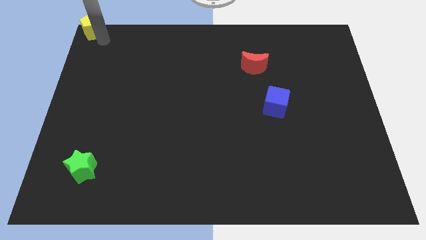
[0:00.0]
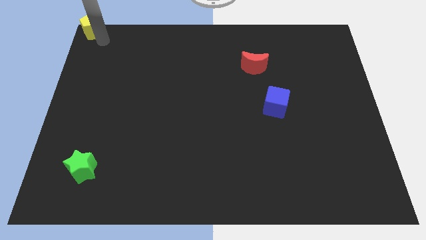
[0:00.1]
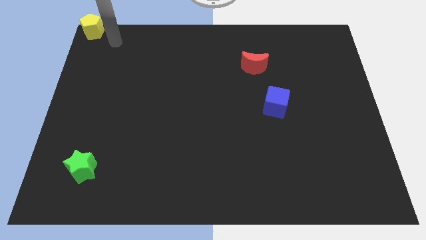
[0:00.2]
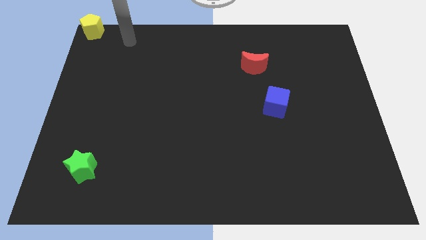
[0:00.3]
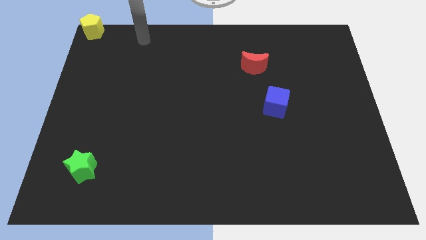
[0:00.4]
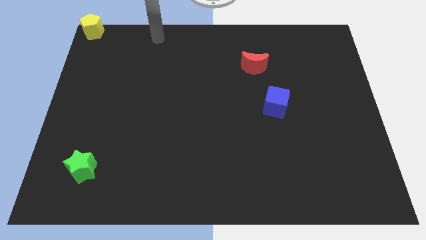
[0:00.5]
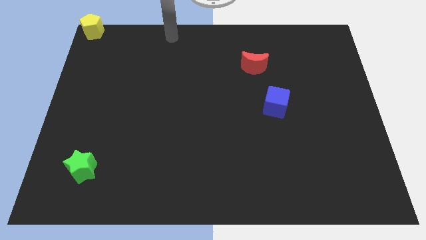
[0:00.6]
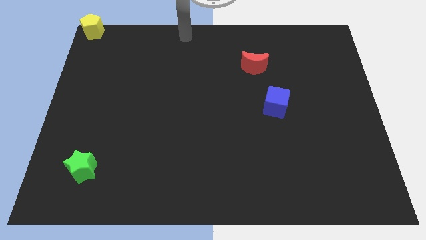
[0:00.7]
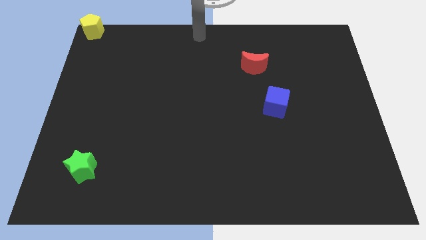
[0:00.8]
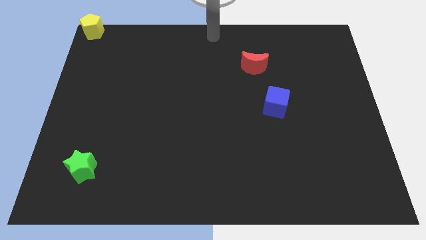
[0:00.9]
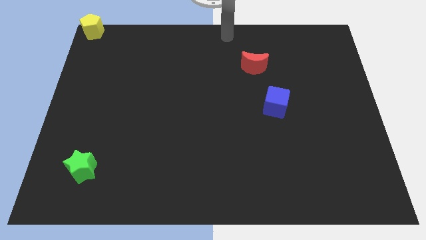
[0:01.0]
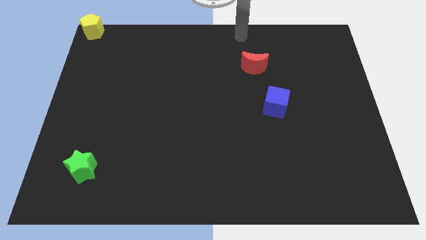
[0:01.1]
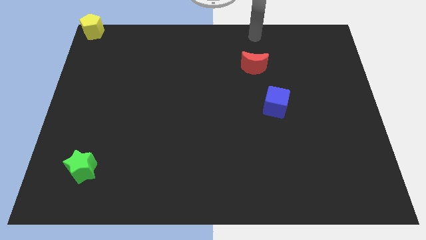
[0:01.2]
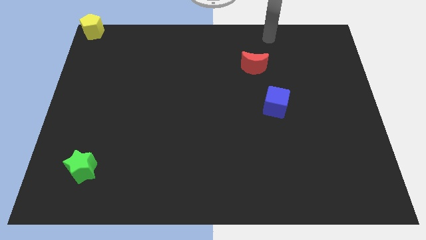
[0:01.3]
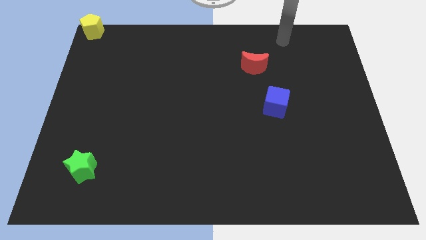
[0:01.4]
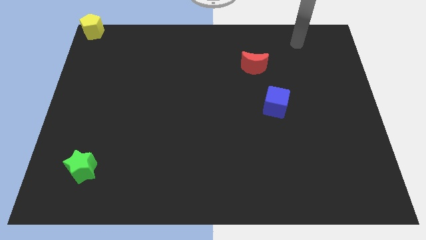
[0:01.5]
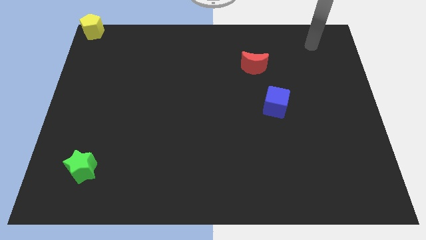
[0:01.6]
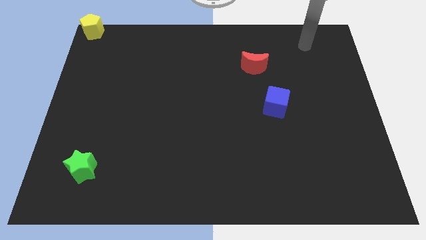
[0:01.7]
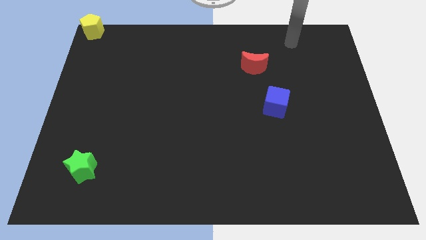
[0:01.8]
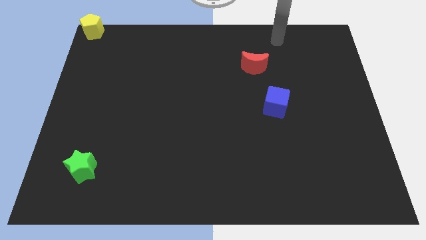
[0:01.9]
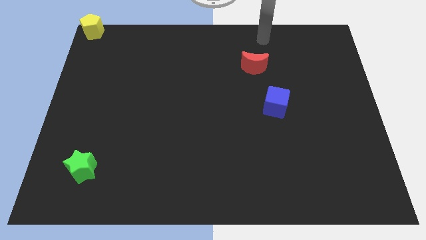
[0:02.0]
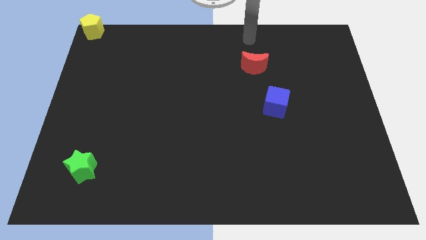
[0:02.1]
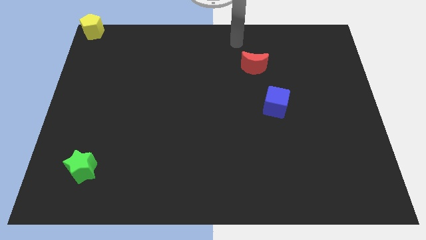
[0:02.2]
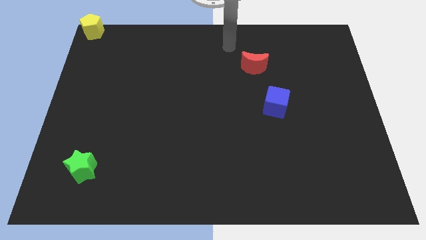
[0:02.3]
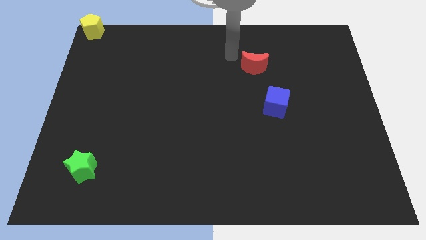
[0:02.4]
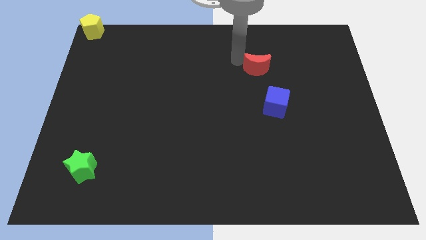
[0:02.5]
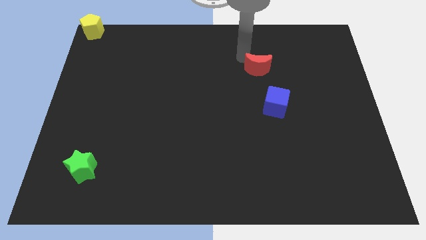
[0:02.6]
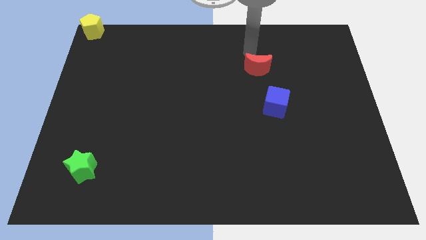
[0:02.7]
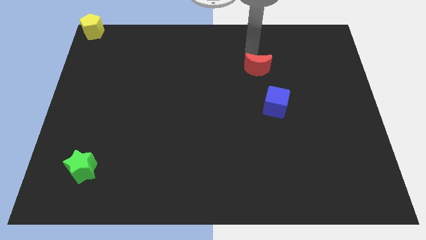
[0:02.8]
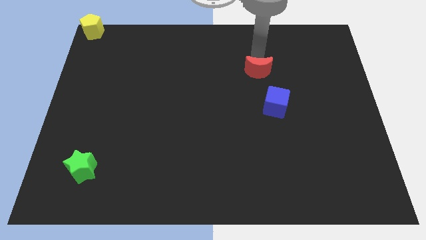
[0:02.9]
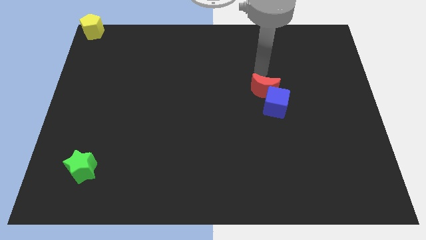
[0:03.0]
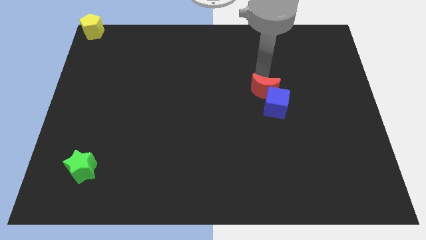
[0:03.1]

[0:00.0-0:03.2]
move your arm away from the yellow pentagon

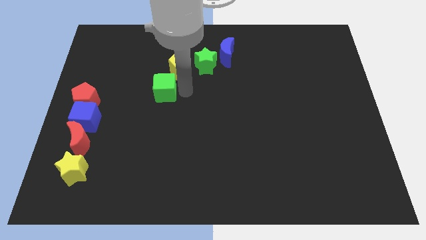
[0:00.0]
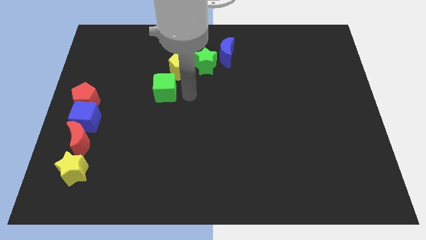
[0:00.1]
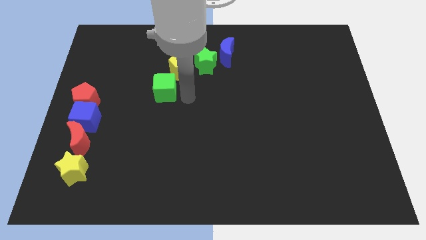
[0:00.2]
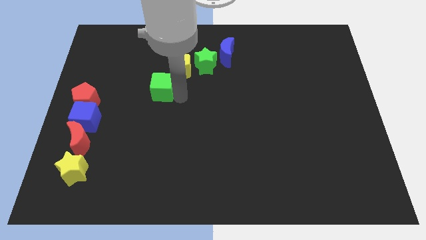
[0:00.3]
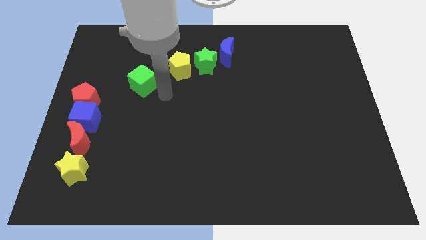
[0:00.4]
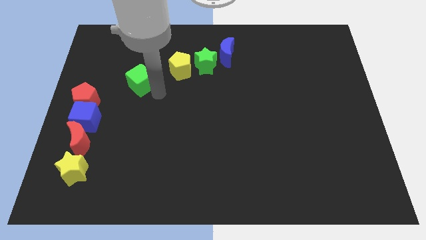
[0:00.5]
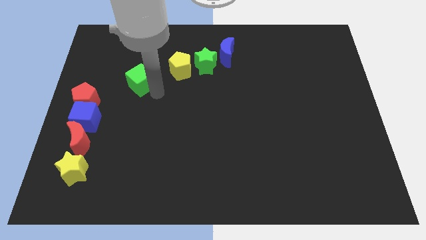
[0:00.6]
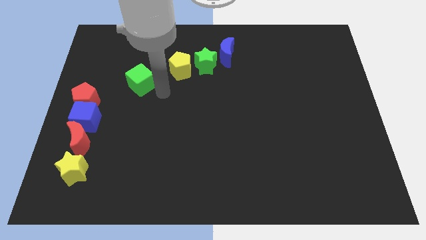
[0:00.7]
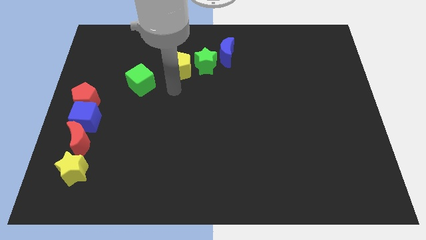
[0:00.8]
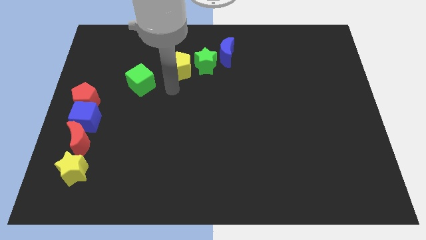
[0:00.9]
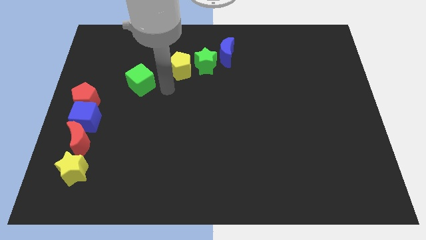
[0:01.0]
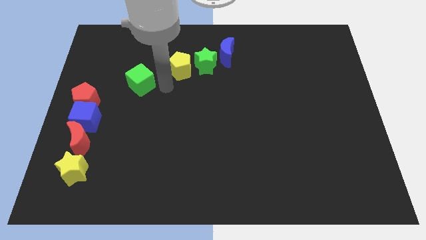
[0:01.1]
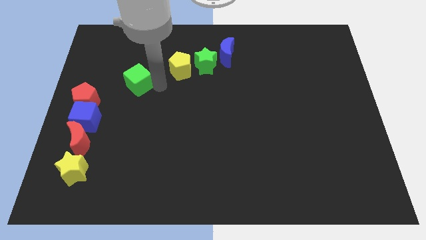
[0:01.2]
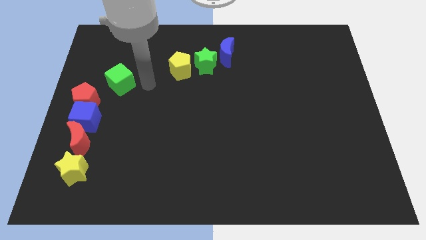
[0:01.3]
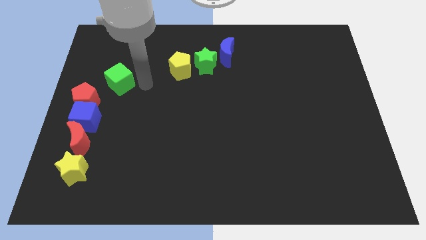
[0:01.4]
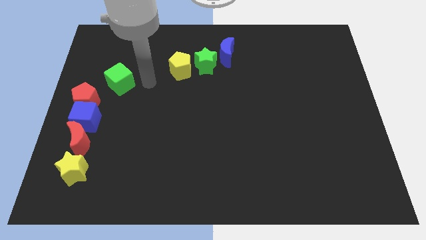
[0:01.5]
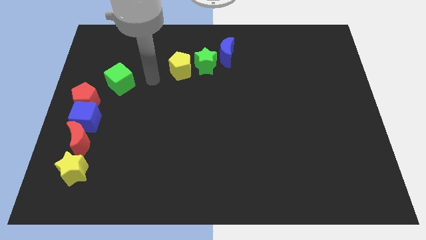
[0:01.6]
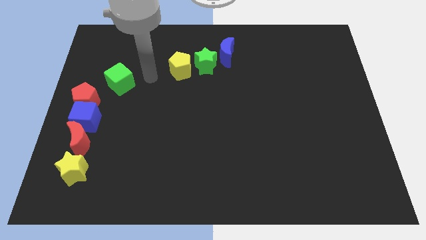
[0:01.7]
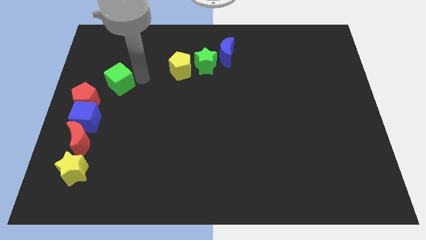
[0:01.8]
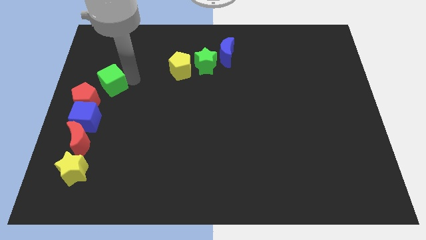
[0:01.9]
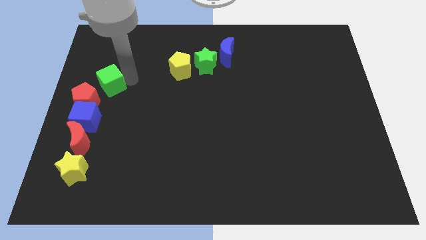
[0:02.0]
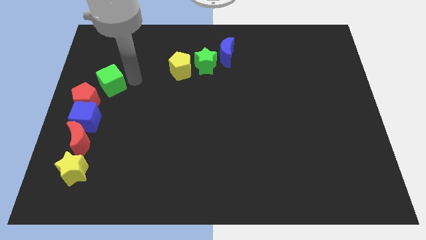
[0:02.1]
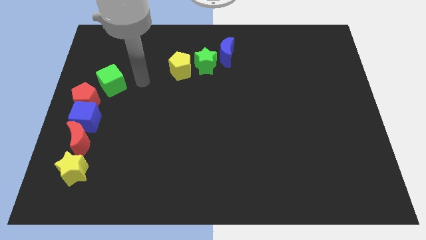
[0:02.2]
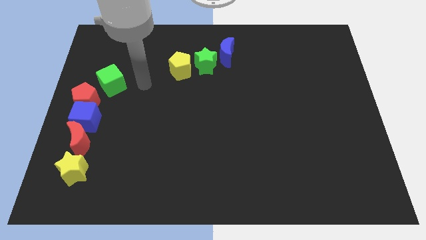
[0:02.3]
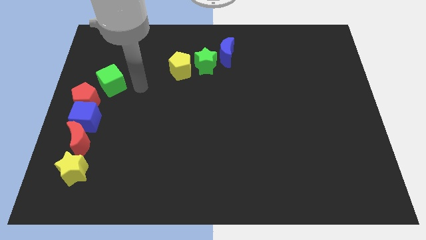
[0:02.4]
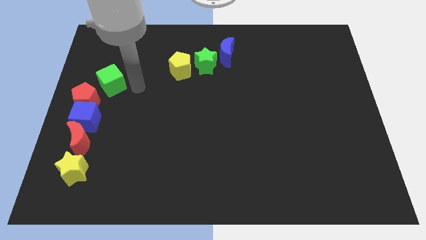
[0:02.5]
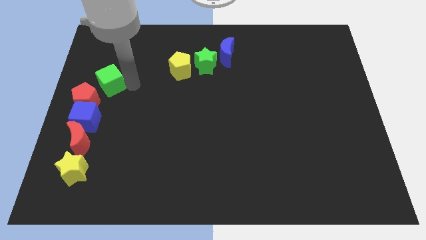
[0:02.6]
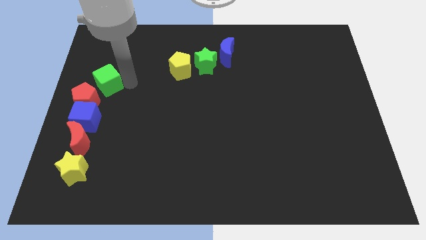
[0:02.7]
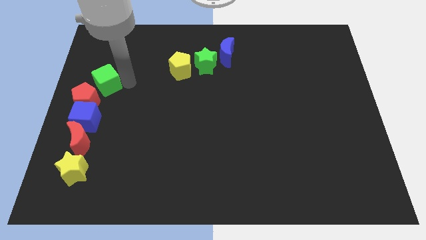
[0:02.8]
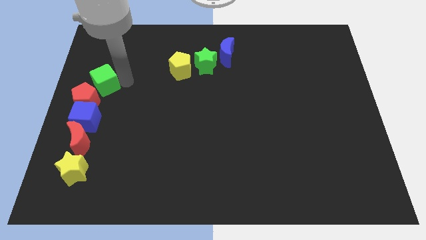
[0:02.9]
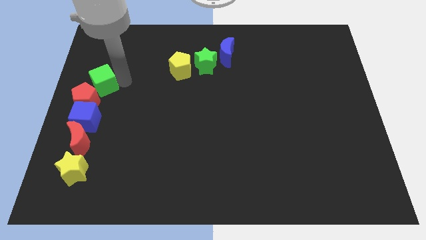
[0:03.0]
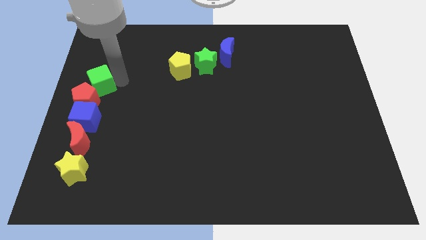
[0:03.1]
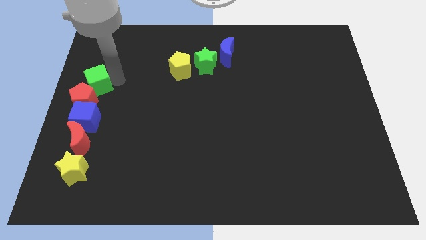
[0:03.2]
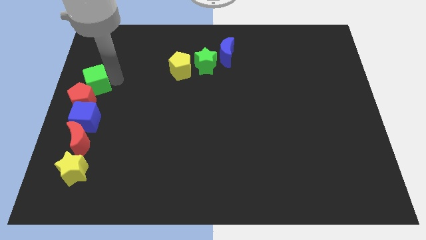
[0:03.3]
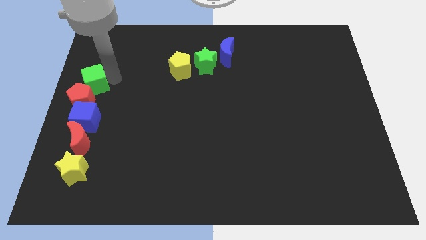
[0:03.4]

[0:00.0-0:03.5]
push the green cube into red pentagon

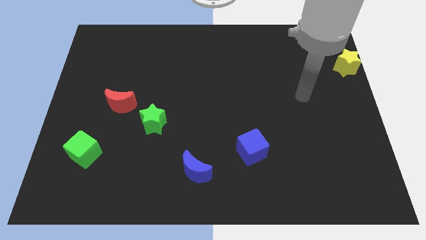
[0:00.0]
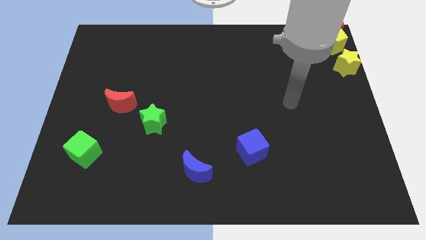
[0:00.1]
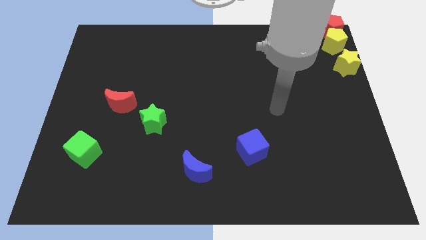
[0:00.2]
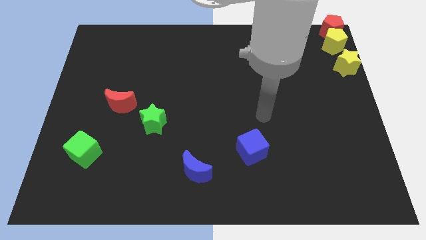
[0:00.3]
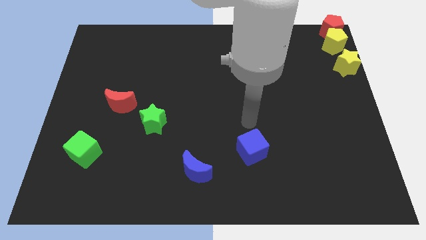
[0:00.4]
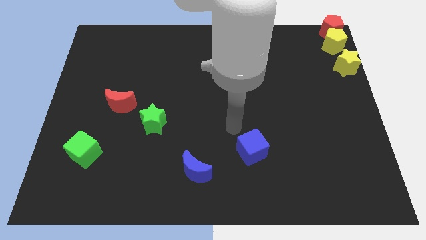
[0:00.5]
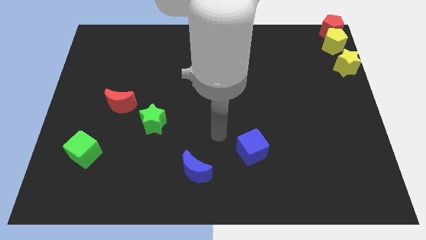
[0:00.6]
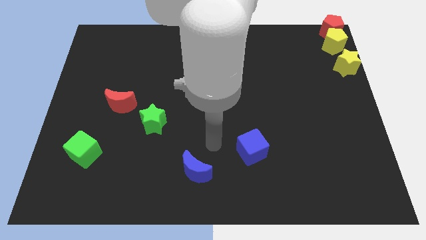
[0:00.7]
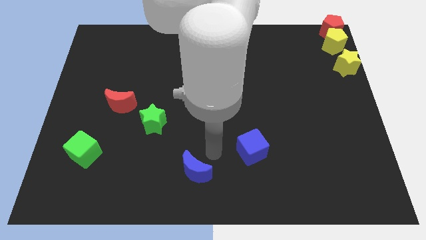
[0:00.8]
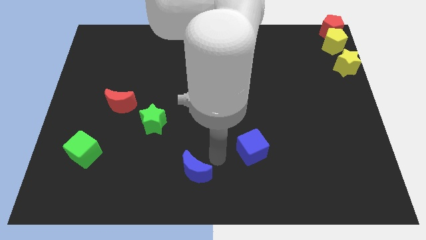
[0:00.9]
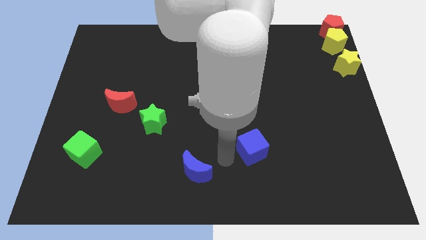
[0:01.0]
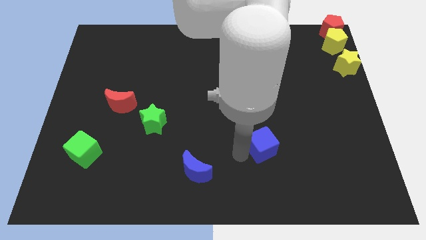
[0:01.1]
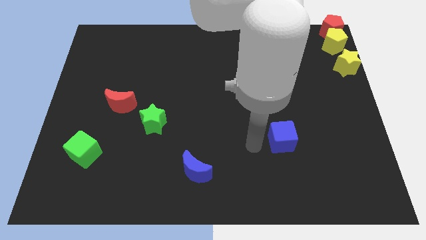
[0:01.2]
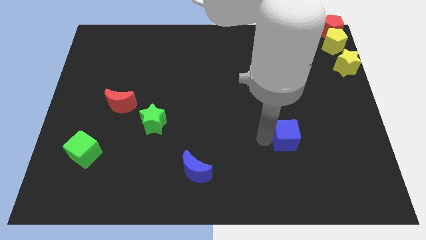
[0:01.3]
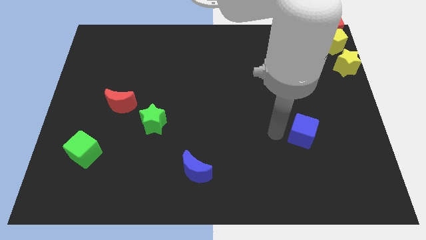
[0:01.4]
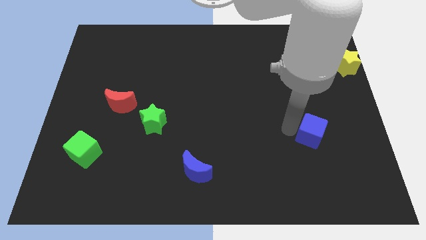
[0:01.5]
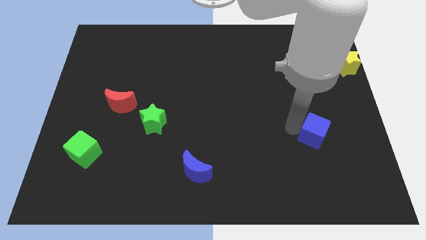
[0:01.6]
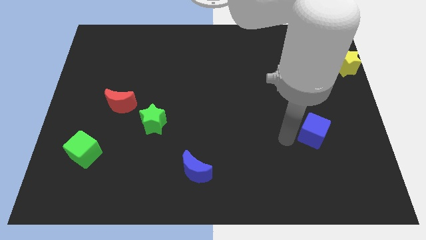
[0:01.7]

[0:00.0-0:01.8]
drag the blue cube to the right side of the table

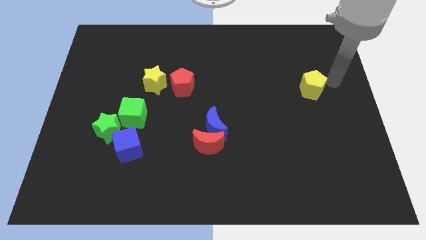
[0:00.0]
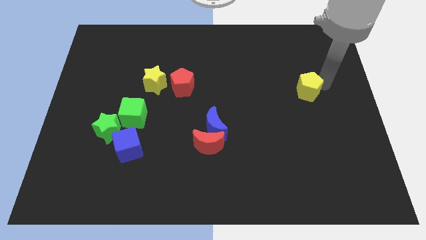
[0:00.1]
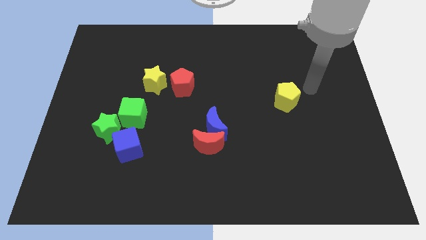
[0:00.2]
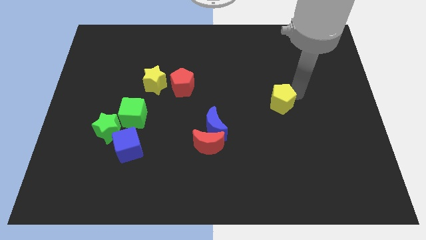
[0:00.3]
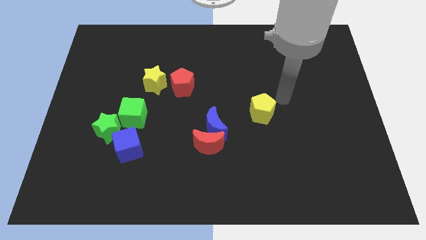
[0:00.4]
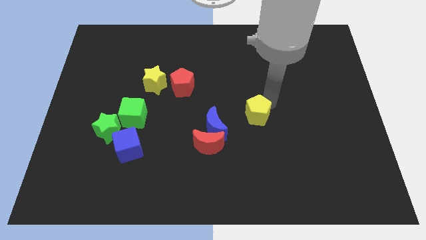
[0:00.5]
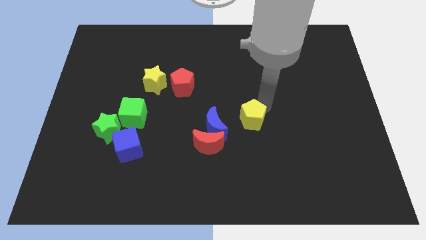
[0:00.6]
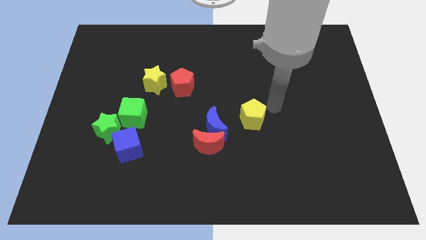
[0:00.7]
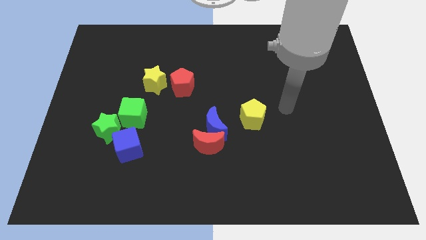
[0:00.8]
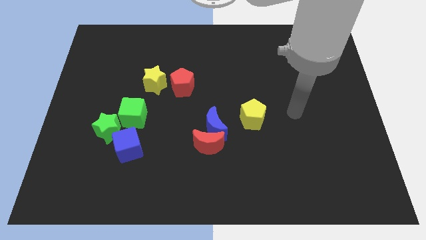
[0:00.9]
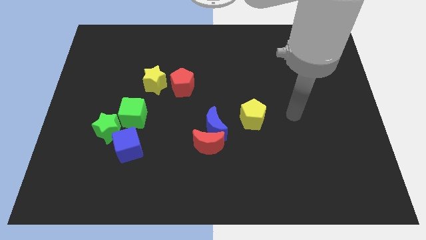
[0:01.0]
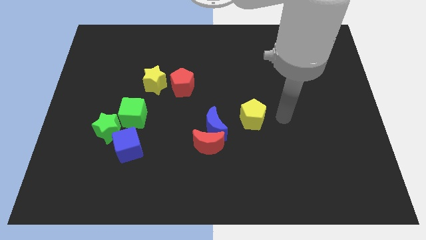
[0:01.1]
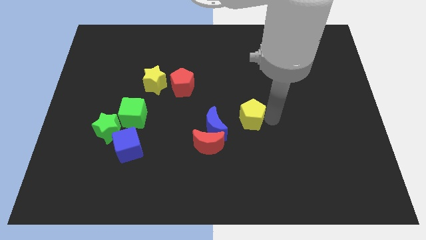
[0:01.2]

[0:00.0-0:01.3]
push the yellow pentagon towards the blue crescent
